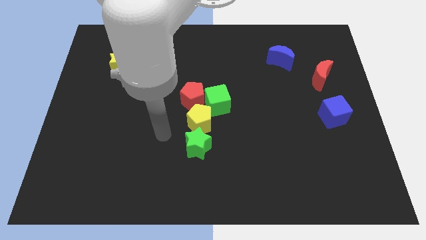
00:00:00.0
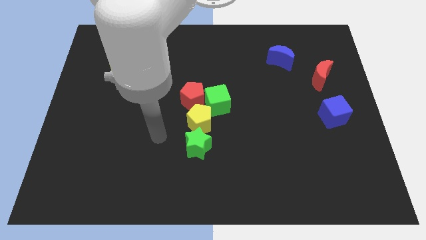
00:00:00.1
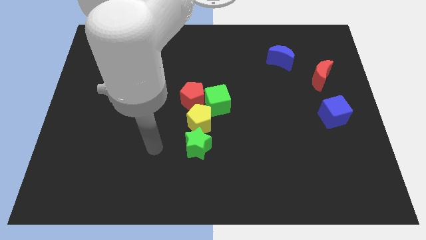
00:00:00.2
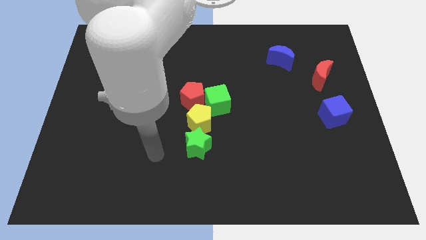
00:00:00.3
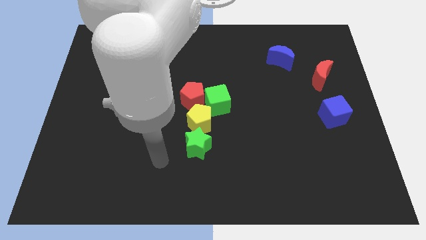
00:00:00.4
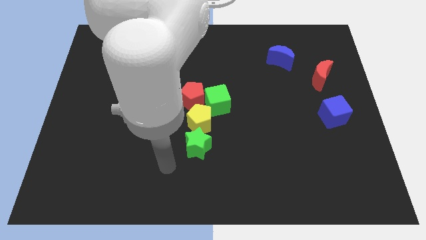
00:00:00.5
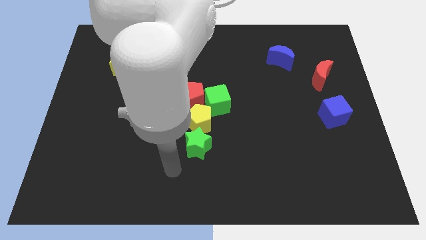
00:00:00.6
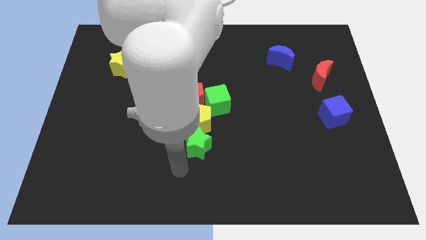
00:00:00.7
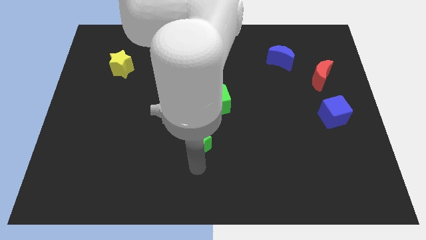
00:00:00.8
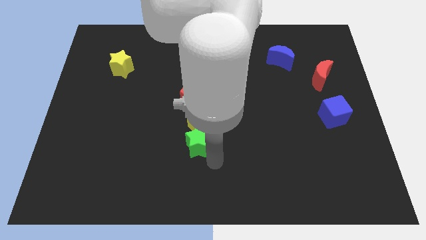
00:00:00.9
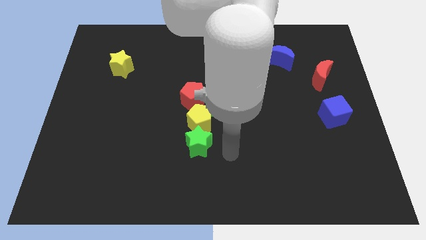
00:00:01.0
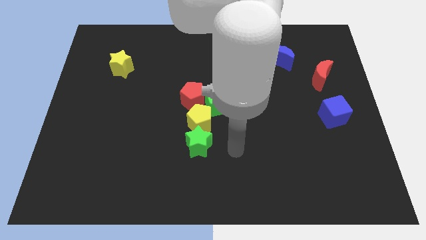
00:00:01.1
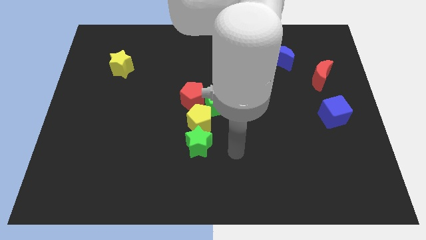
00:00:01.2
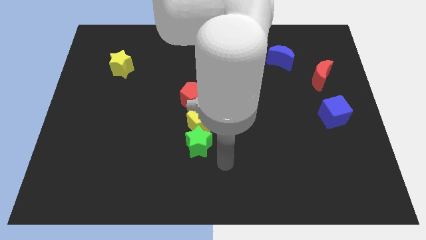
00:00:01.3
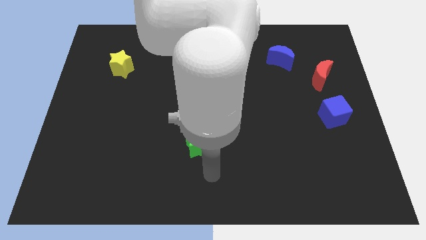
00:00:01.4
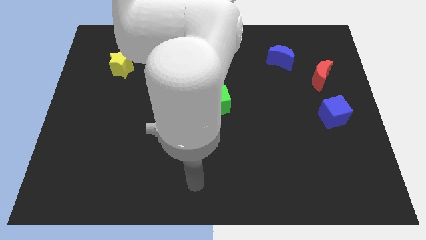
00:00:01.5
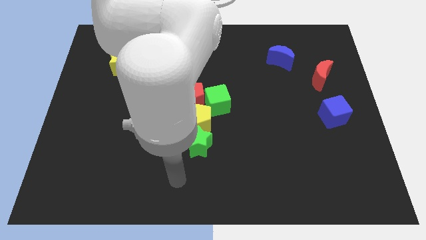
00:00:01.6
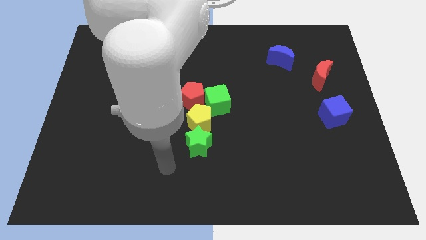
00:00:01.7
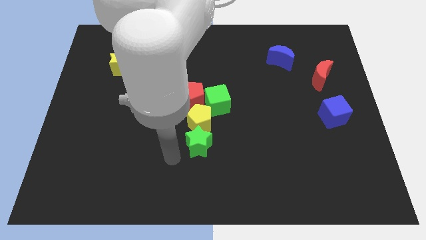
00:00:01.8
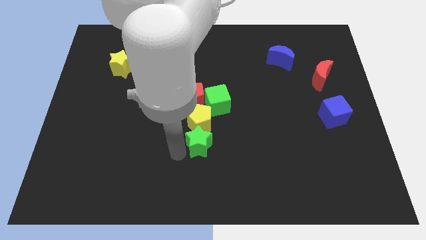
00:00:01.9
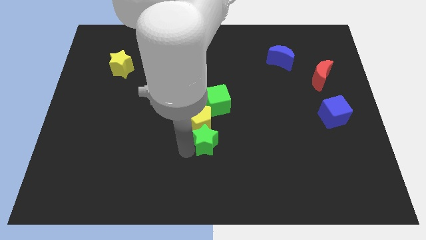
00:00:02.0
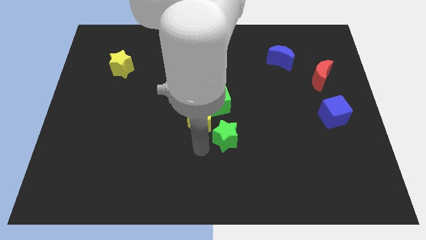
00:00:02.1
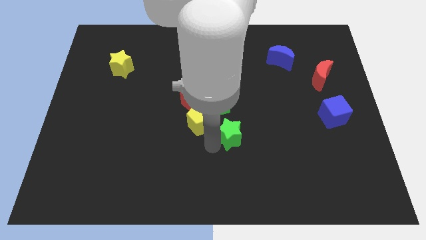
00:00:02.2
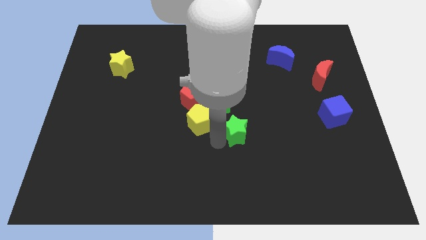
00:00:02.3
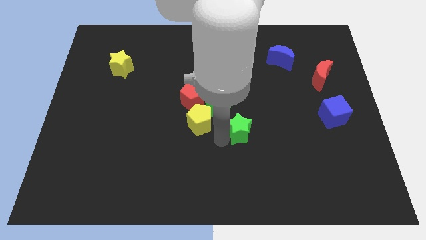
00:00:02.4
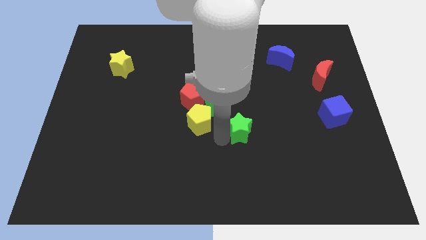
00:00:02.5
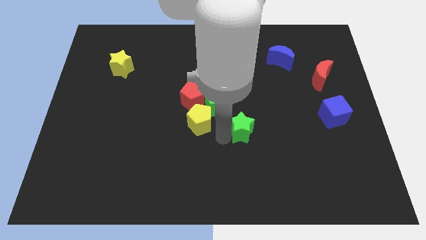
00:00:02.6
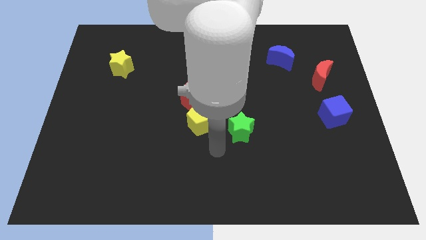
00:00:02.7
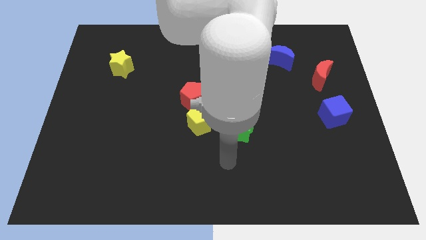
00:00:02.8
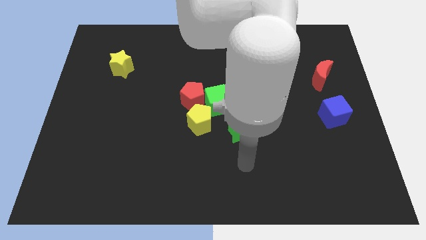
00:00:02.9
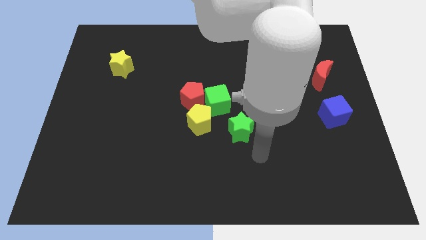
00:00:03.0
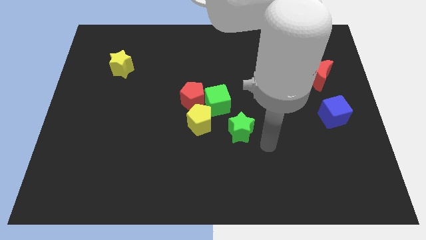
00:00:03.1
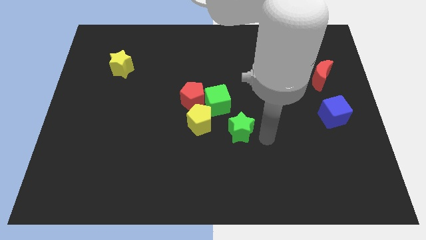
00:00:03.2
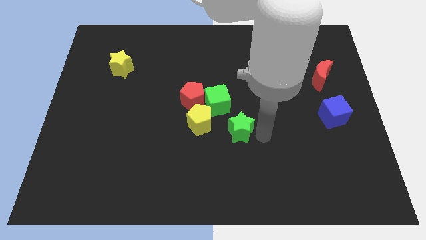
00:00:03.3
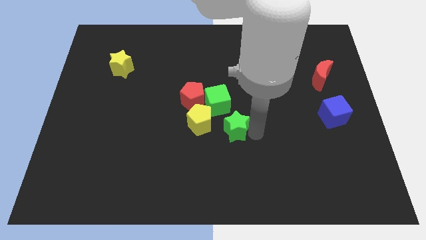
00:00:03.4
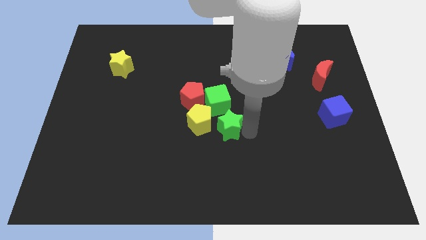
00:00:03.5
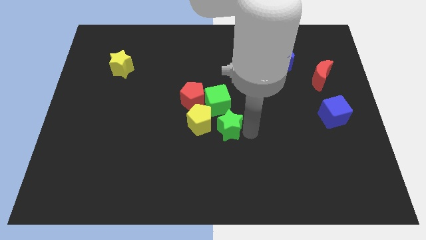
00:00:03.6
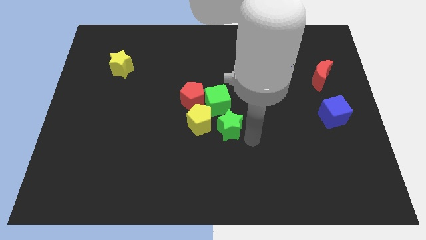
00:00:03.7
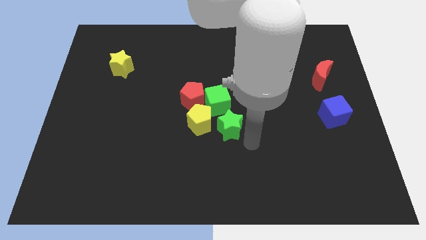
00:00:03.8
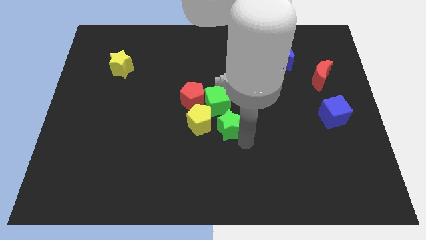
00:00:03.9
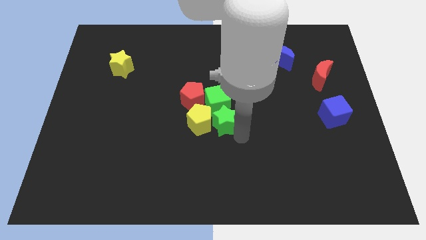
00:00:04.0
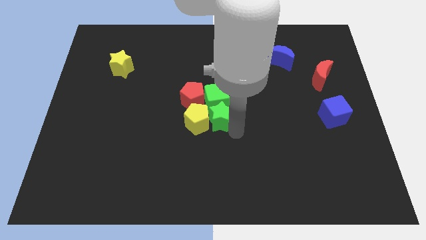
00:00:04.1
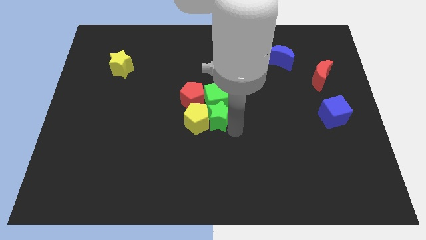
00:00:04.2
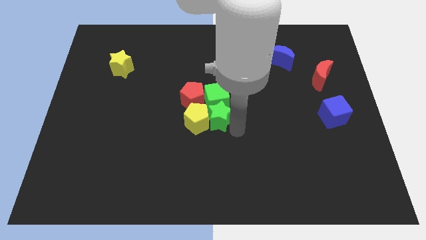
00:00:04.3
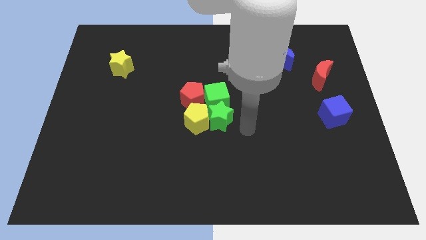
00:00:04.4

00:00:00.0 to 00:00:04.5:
move the green star to the right of the yellow pentagon

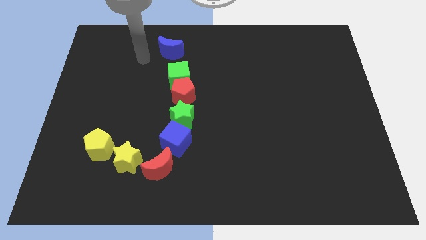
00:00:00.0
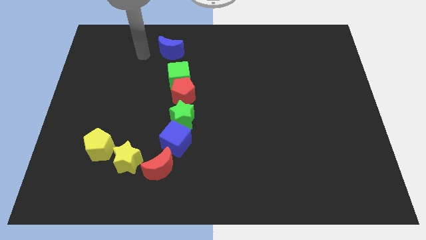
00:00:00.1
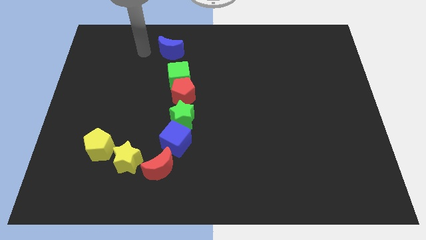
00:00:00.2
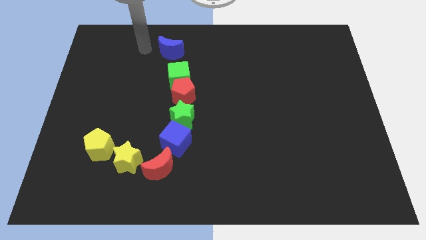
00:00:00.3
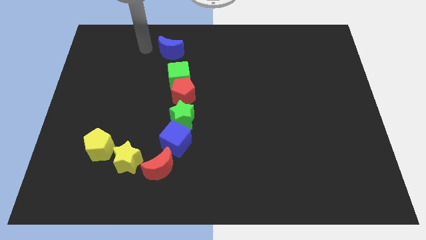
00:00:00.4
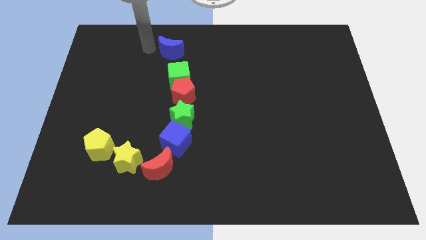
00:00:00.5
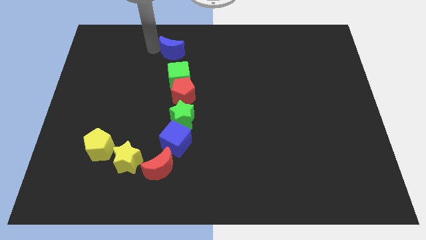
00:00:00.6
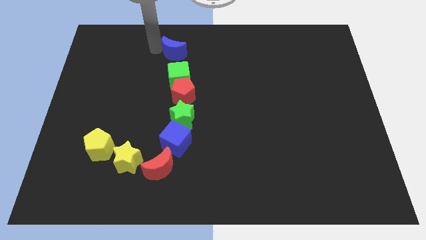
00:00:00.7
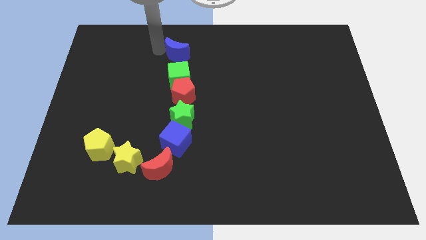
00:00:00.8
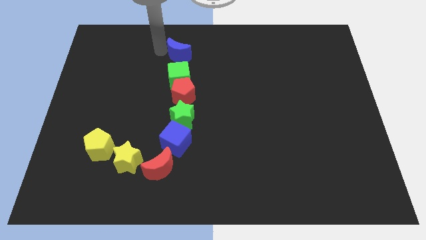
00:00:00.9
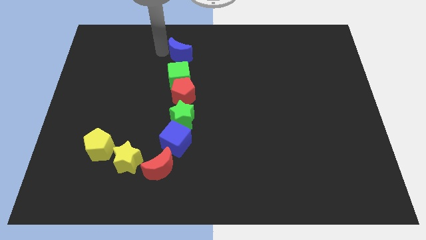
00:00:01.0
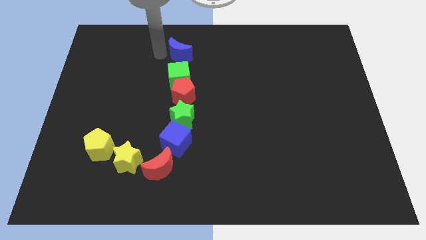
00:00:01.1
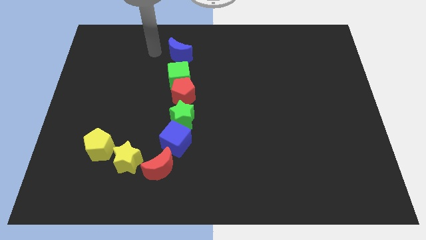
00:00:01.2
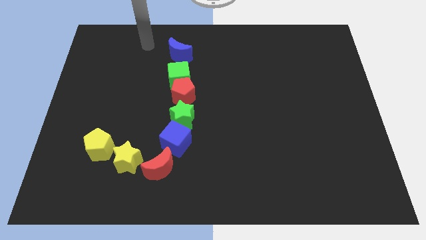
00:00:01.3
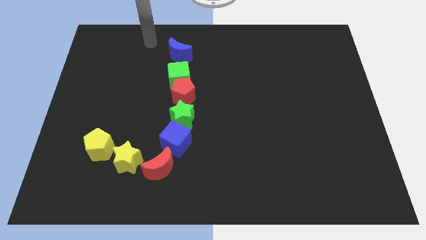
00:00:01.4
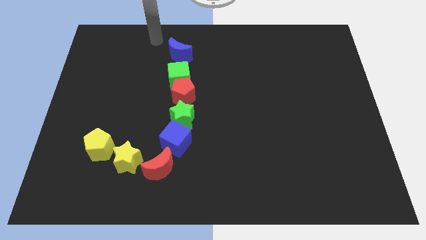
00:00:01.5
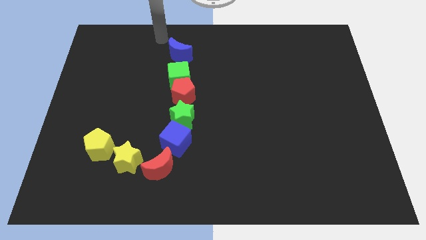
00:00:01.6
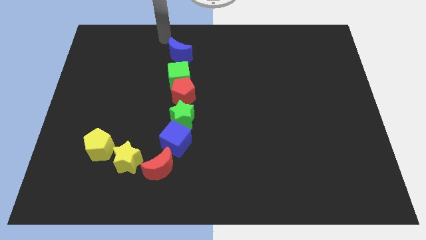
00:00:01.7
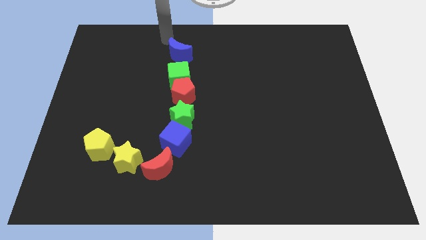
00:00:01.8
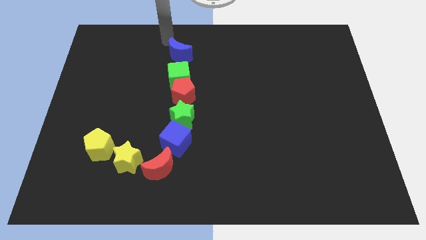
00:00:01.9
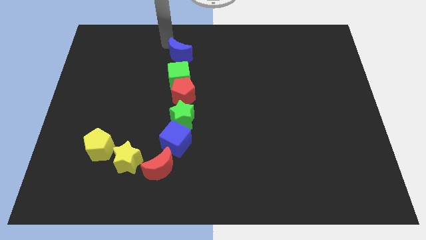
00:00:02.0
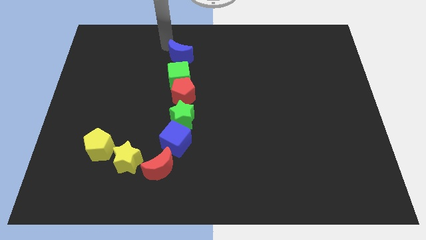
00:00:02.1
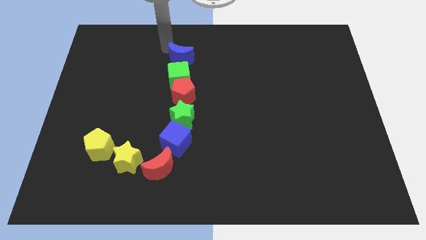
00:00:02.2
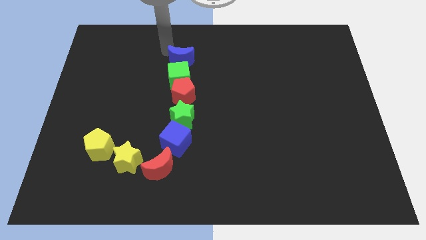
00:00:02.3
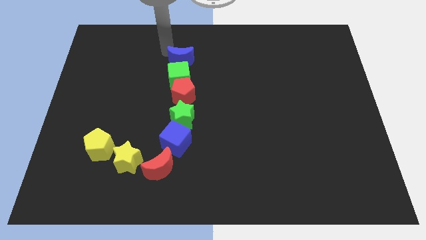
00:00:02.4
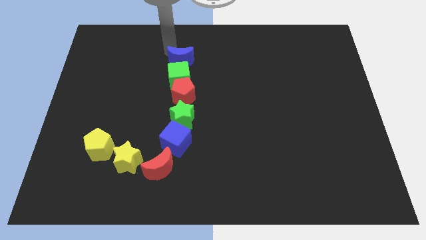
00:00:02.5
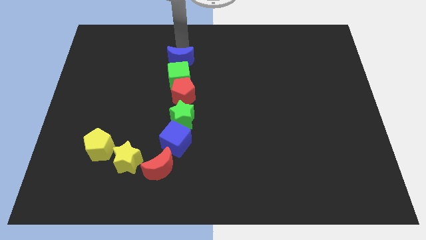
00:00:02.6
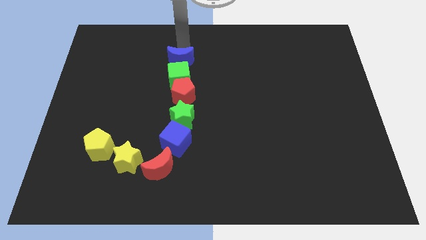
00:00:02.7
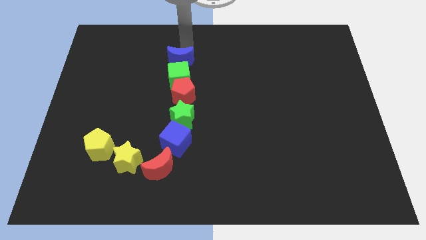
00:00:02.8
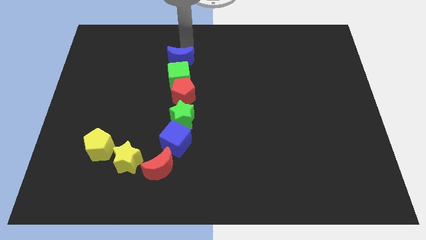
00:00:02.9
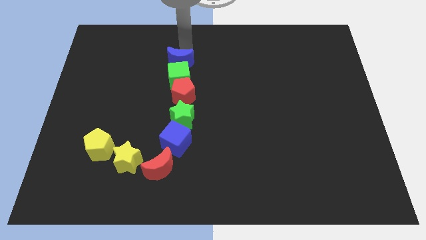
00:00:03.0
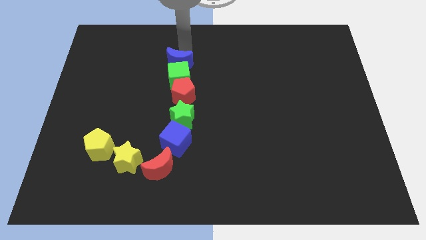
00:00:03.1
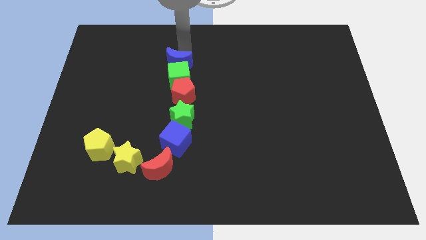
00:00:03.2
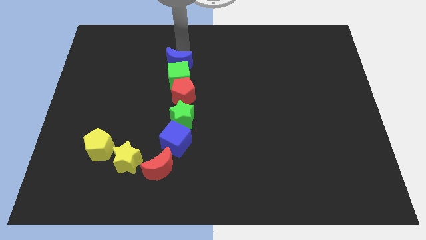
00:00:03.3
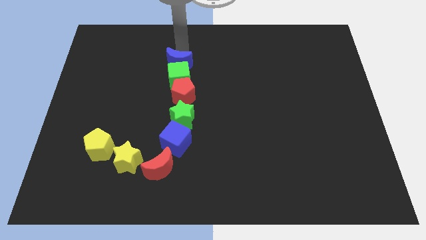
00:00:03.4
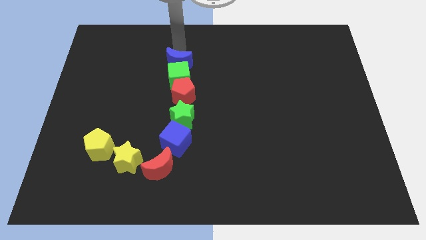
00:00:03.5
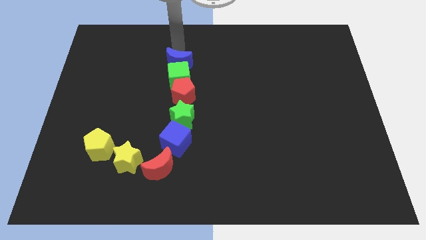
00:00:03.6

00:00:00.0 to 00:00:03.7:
push the blue crescent towards green cube

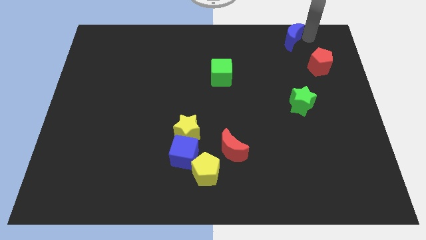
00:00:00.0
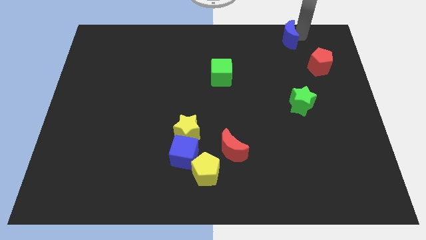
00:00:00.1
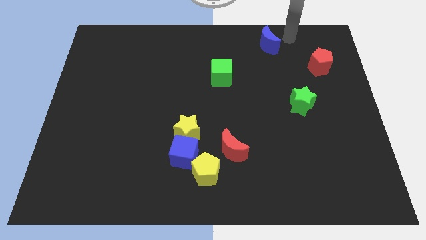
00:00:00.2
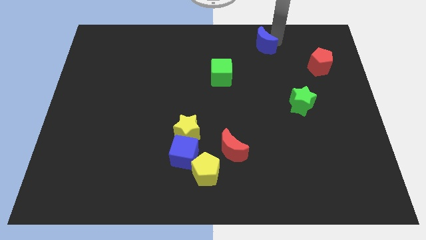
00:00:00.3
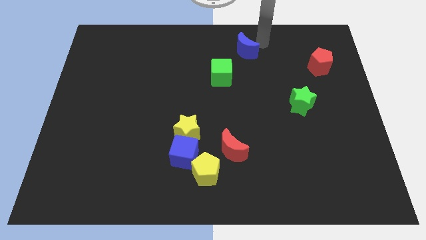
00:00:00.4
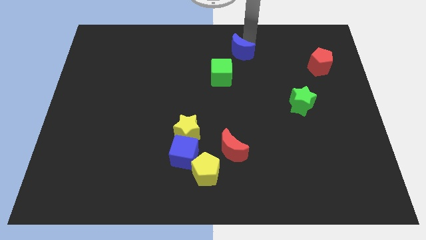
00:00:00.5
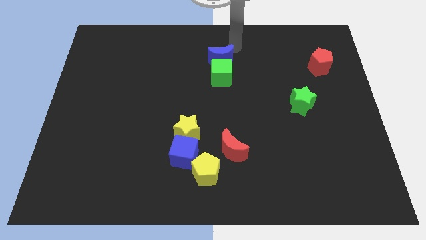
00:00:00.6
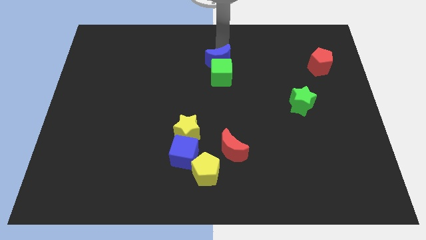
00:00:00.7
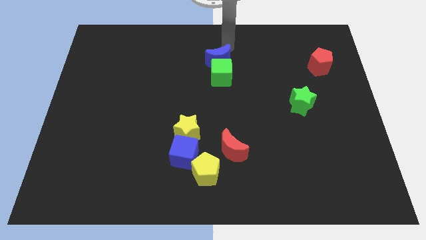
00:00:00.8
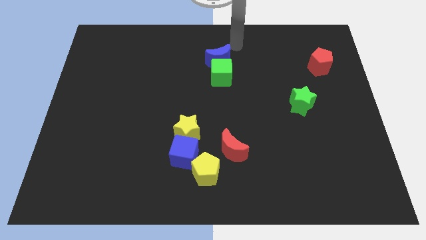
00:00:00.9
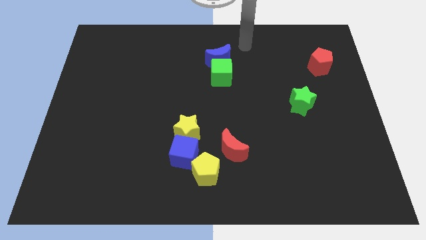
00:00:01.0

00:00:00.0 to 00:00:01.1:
place the blue crescent above the green star
